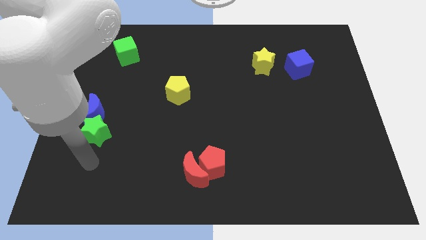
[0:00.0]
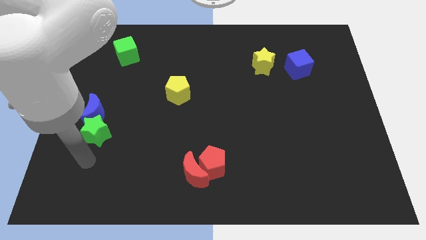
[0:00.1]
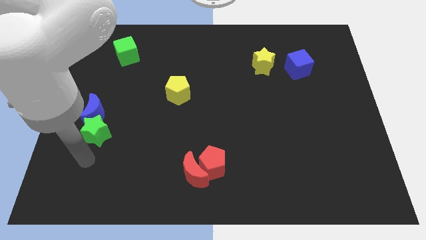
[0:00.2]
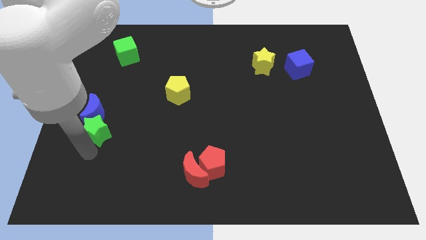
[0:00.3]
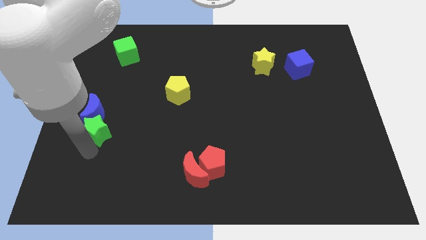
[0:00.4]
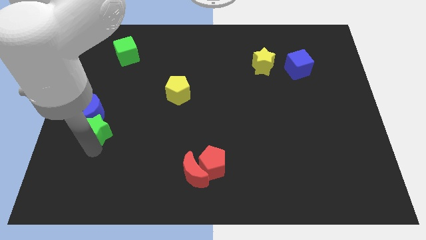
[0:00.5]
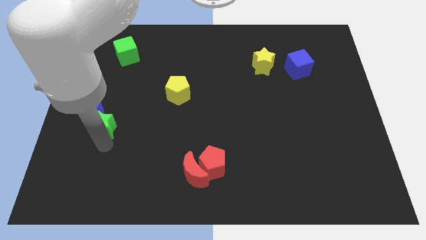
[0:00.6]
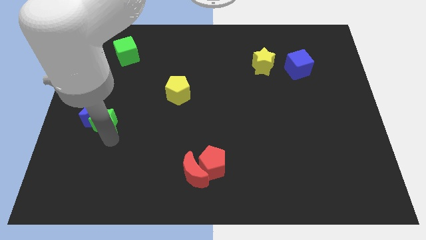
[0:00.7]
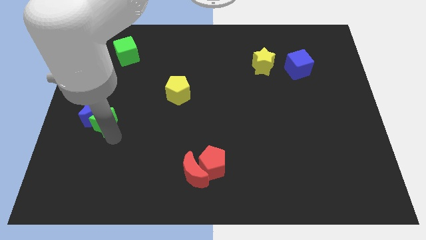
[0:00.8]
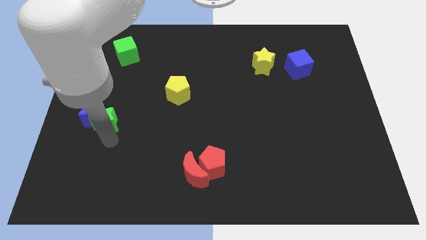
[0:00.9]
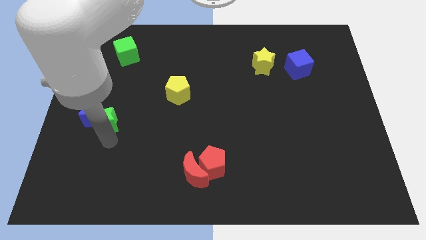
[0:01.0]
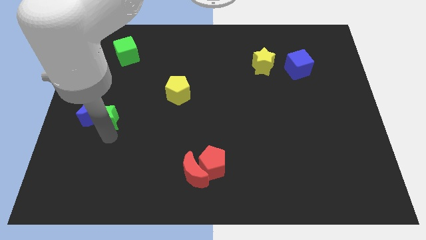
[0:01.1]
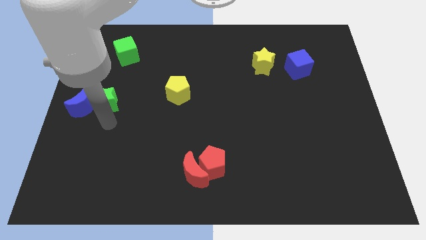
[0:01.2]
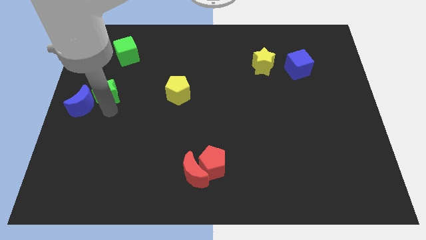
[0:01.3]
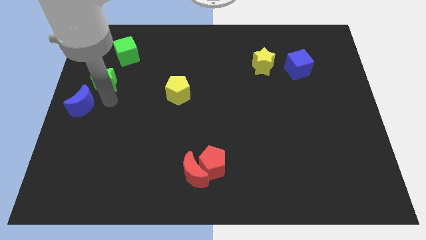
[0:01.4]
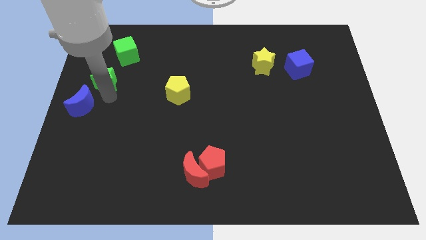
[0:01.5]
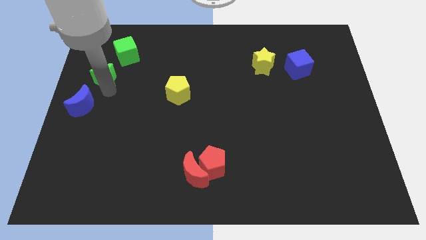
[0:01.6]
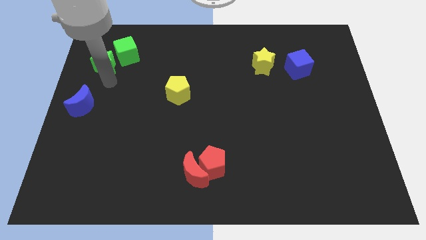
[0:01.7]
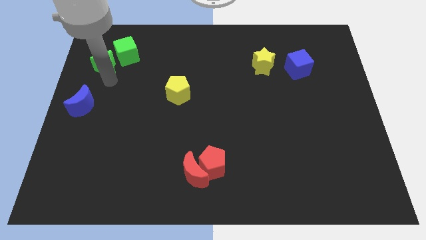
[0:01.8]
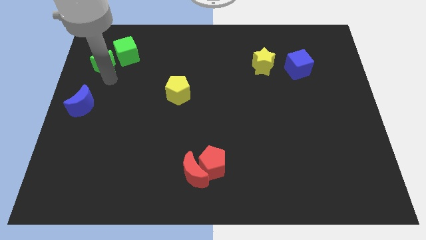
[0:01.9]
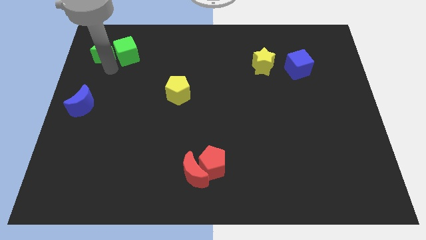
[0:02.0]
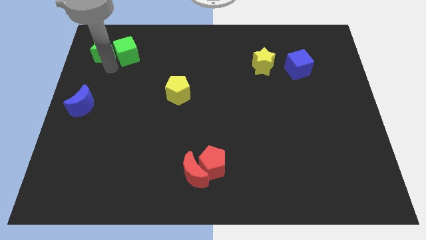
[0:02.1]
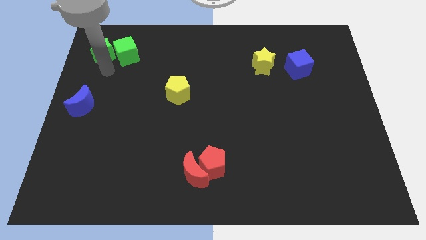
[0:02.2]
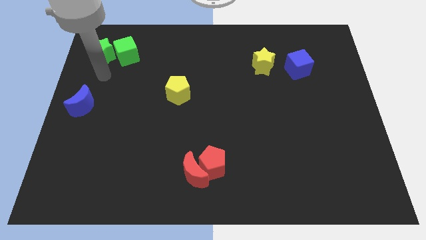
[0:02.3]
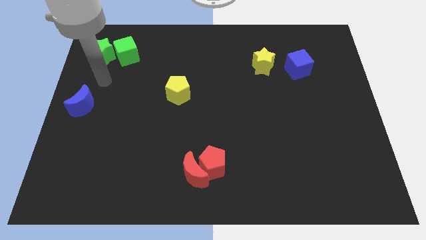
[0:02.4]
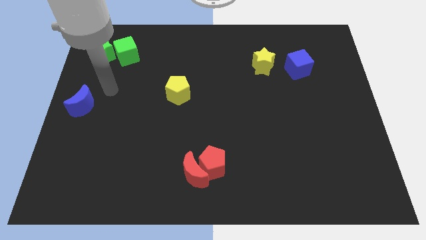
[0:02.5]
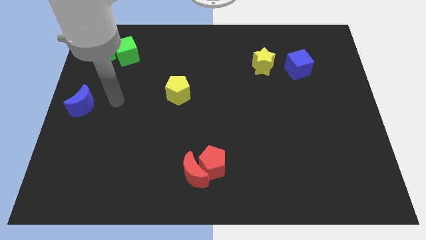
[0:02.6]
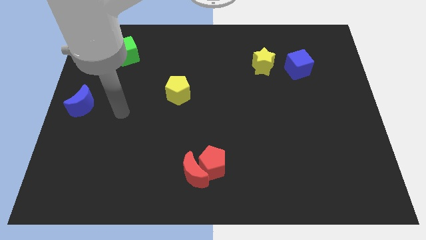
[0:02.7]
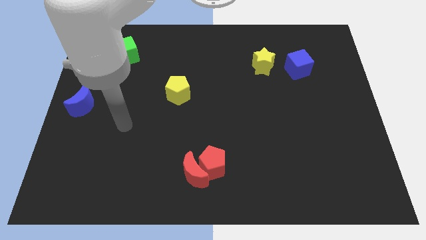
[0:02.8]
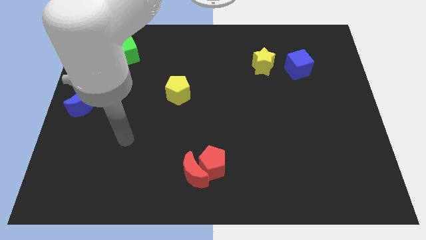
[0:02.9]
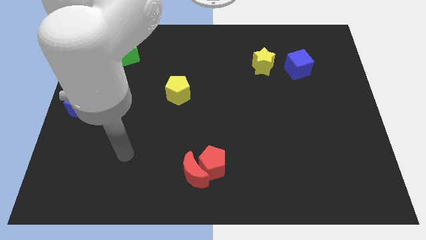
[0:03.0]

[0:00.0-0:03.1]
separate the green star from the blue moon

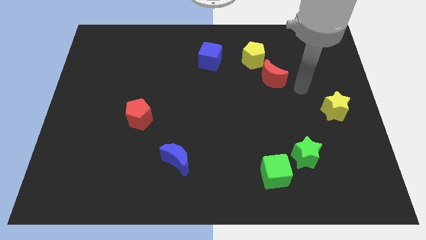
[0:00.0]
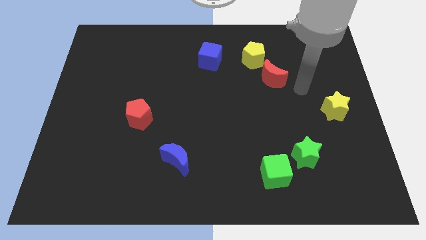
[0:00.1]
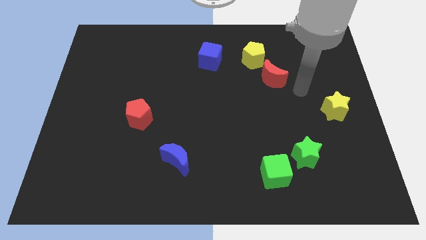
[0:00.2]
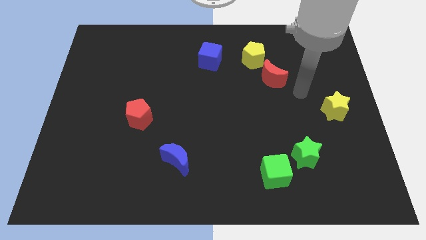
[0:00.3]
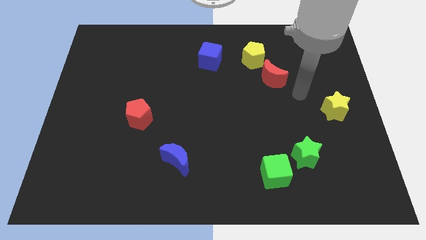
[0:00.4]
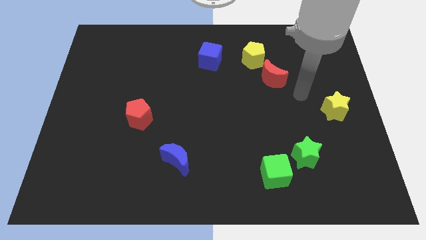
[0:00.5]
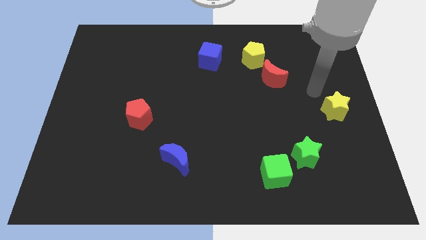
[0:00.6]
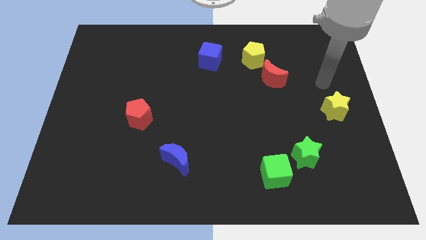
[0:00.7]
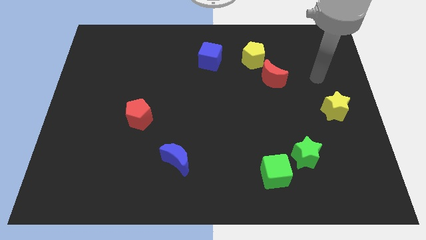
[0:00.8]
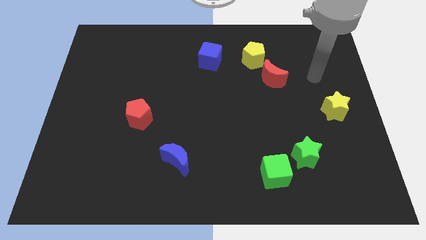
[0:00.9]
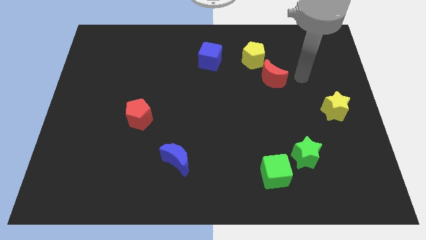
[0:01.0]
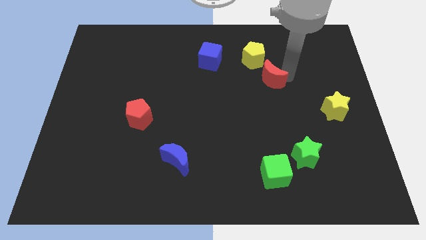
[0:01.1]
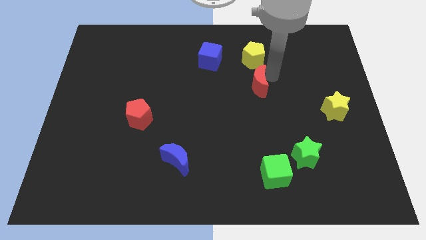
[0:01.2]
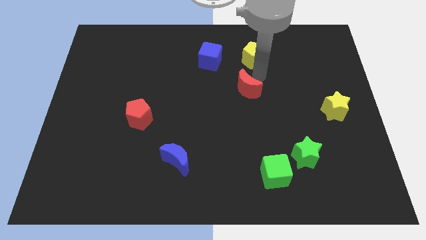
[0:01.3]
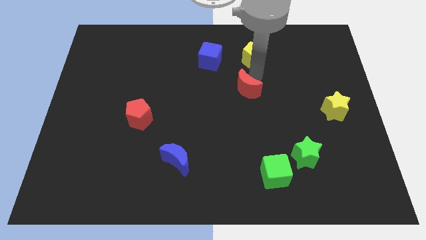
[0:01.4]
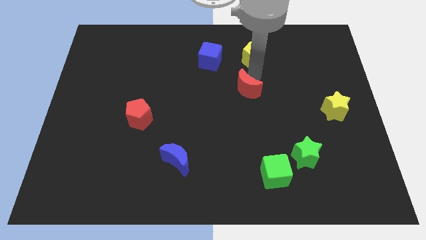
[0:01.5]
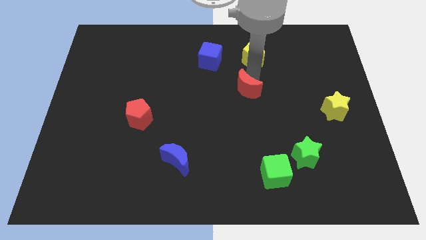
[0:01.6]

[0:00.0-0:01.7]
slide the red crescent slightly to the left

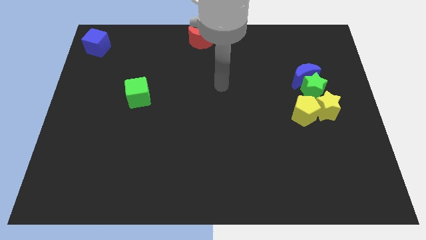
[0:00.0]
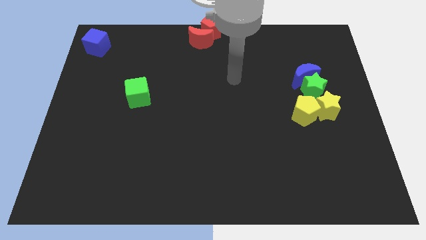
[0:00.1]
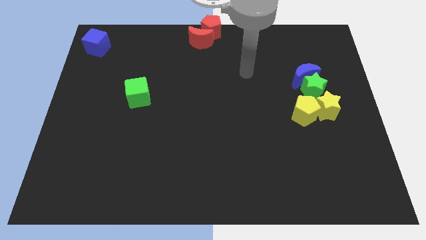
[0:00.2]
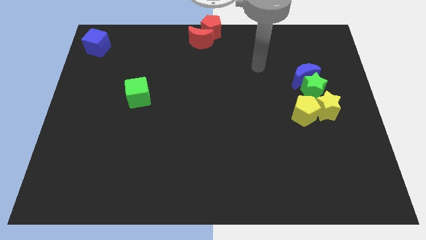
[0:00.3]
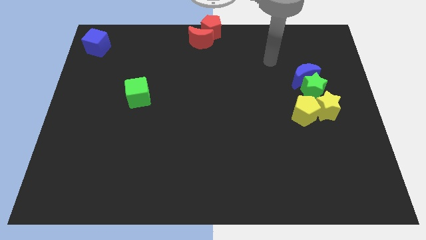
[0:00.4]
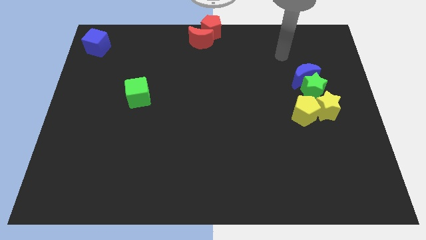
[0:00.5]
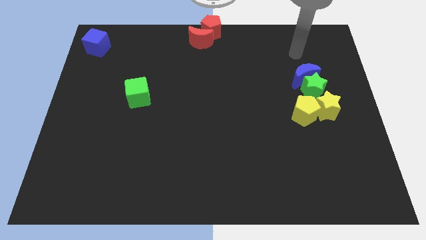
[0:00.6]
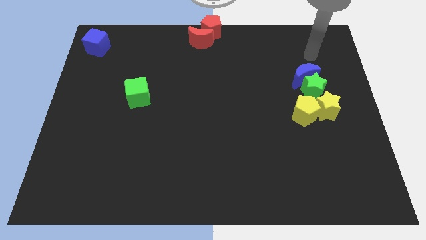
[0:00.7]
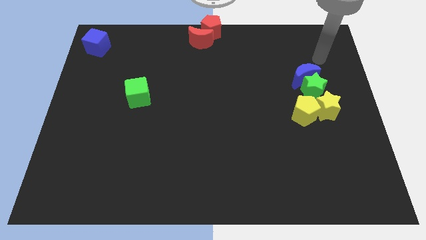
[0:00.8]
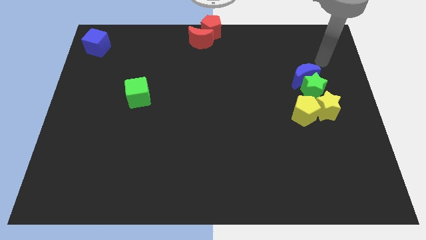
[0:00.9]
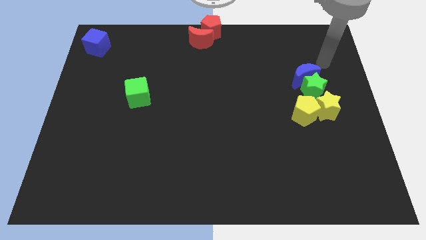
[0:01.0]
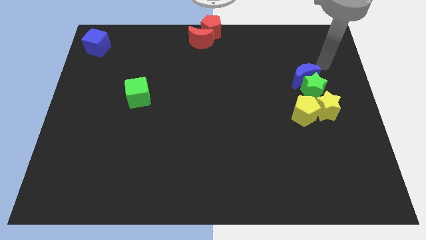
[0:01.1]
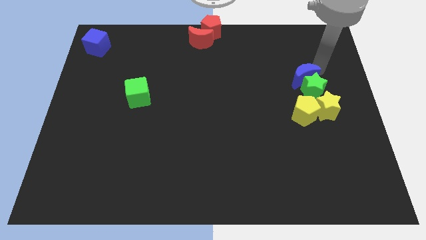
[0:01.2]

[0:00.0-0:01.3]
move the arm near the blue moon

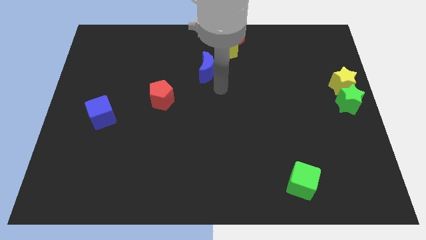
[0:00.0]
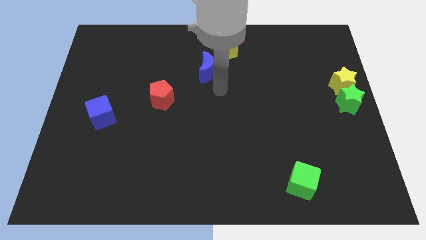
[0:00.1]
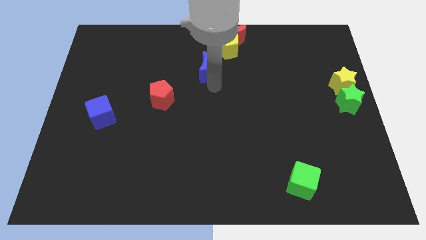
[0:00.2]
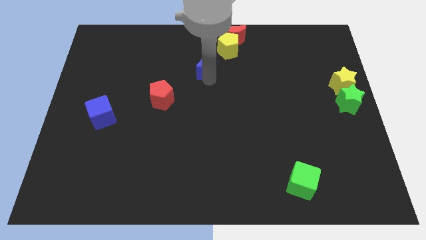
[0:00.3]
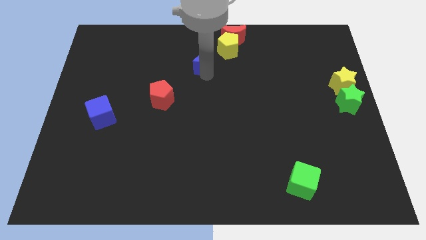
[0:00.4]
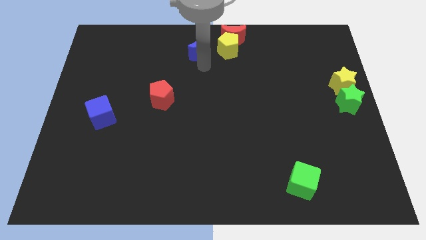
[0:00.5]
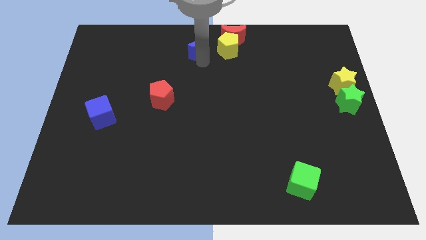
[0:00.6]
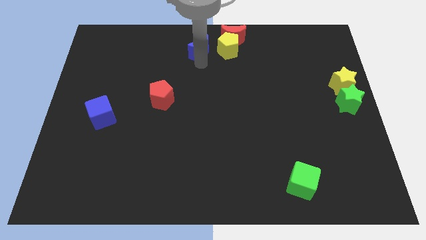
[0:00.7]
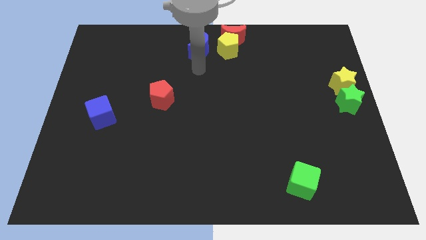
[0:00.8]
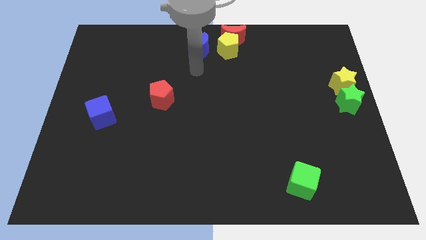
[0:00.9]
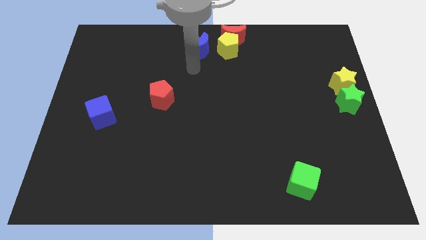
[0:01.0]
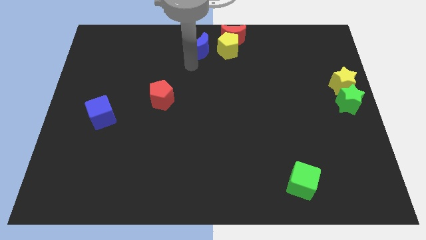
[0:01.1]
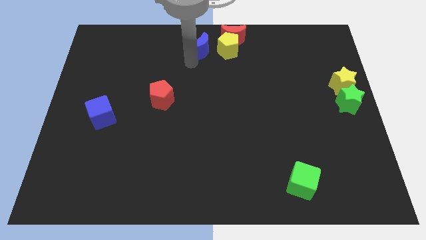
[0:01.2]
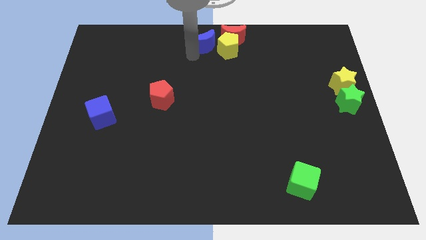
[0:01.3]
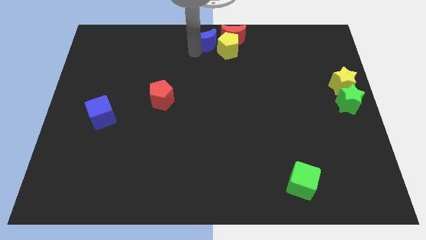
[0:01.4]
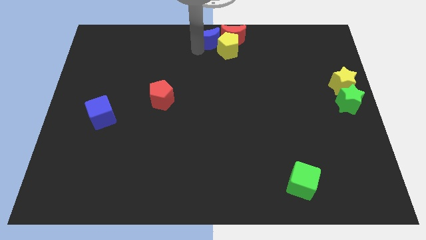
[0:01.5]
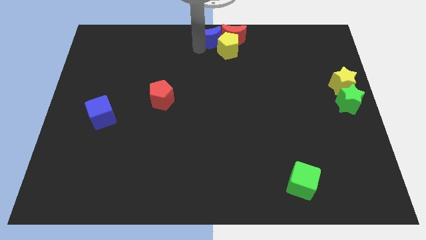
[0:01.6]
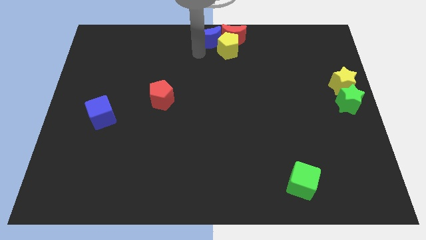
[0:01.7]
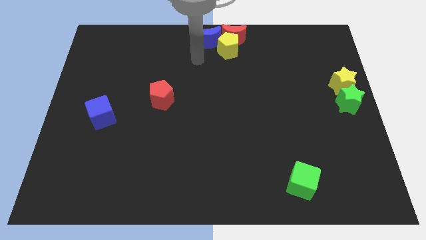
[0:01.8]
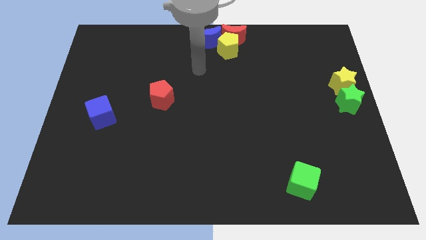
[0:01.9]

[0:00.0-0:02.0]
move the blue crescent to the top center of the board

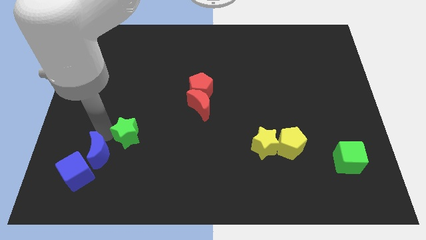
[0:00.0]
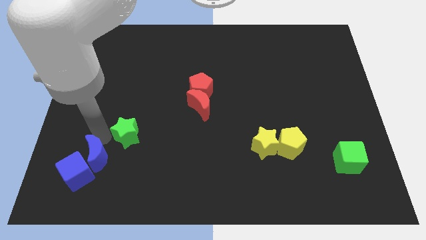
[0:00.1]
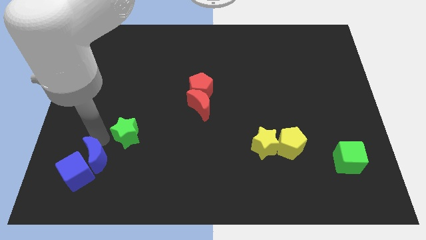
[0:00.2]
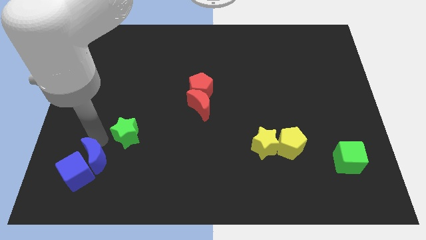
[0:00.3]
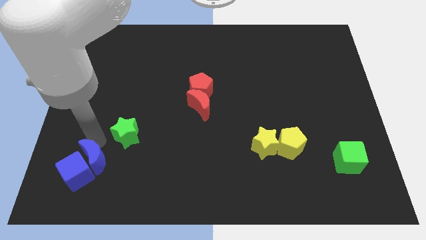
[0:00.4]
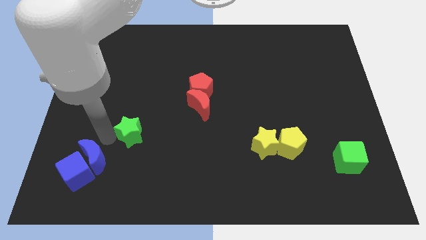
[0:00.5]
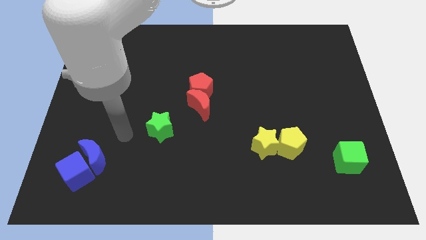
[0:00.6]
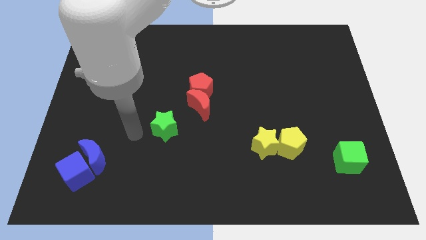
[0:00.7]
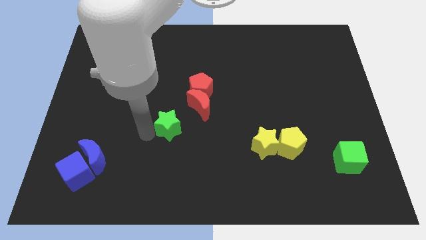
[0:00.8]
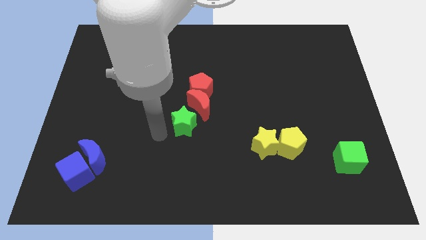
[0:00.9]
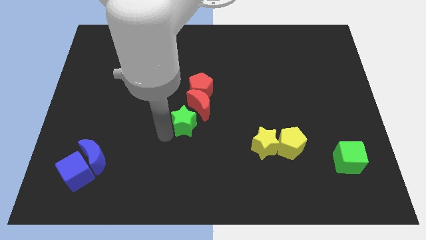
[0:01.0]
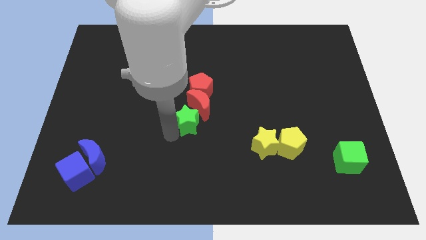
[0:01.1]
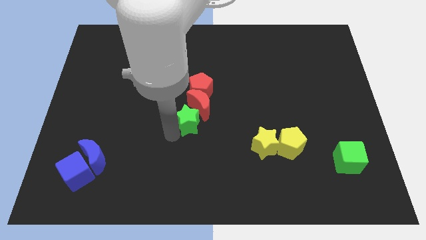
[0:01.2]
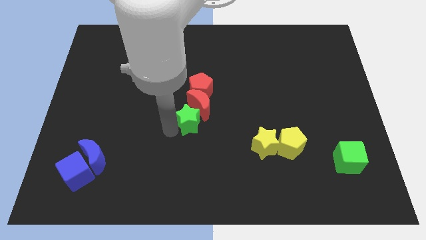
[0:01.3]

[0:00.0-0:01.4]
move the green star to the center of the board
